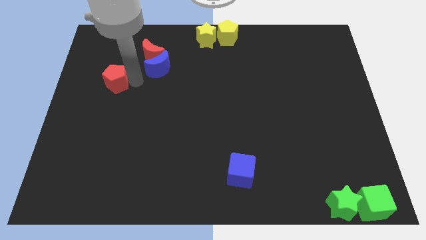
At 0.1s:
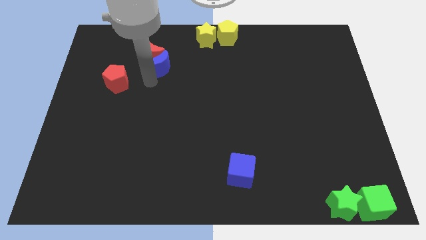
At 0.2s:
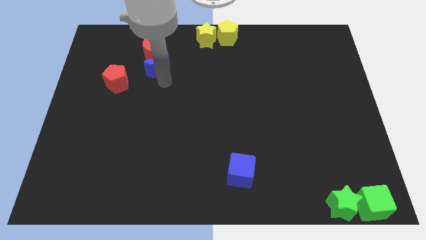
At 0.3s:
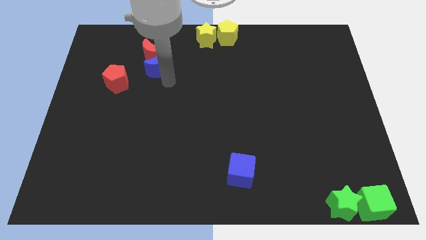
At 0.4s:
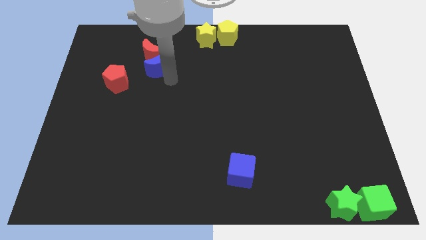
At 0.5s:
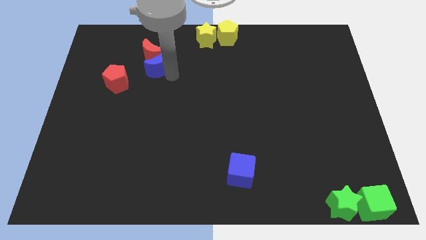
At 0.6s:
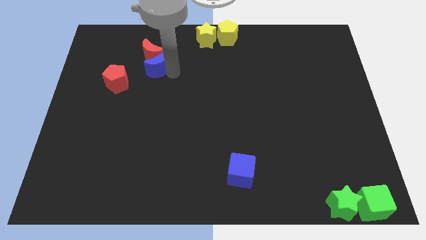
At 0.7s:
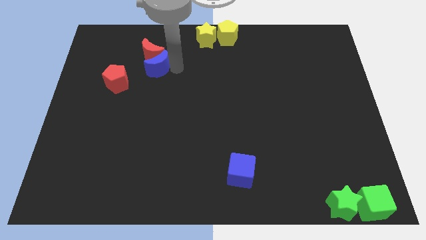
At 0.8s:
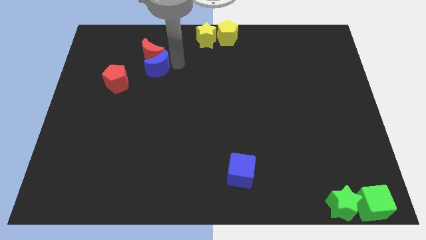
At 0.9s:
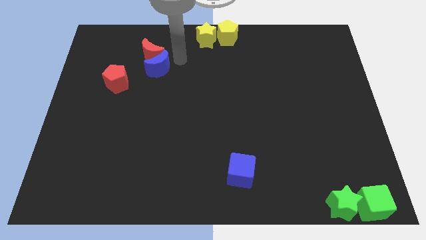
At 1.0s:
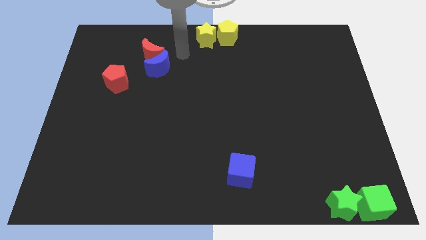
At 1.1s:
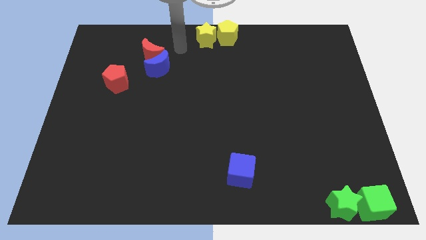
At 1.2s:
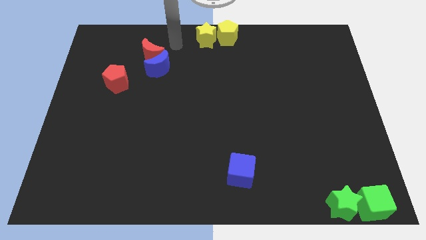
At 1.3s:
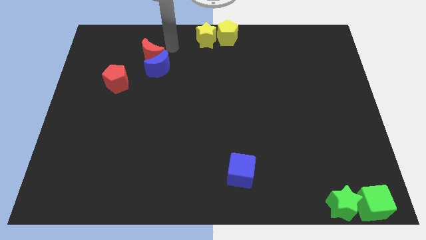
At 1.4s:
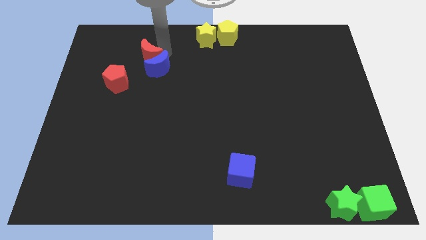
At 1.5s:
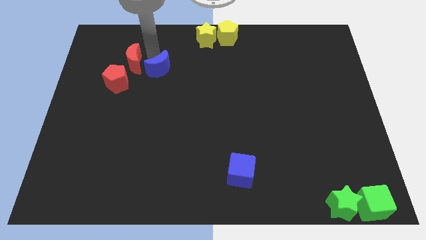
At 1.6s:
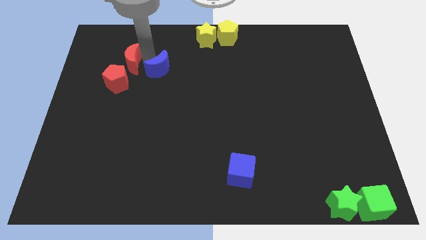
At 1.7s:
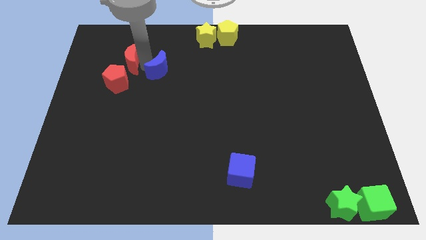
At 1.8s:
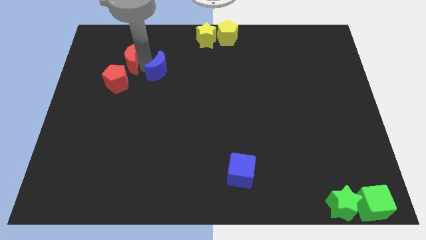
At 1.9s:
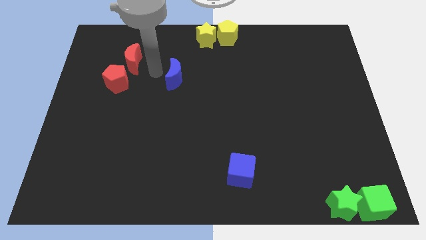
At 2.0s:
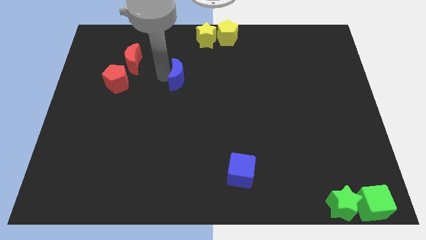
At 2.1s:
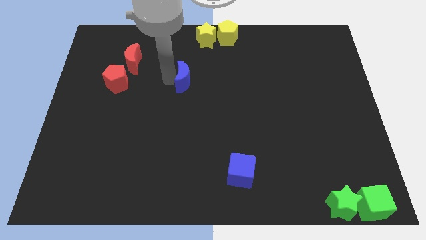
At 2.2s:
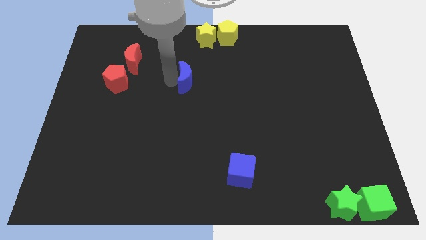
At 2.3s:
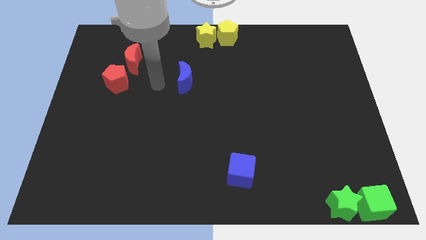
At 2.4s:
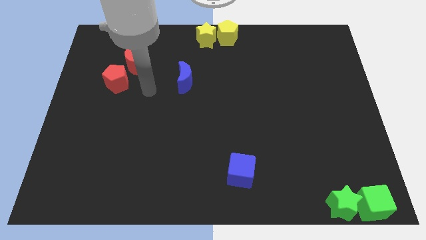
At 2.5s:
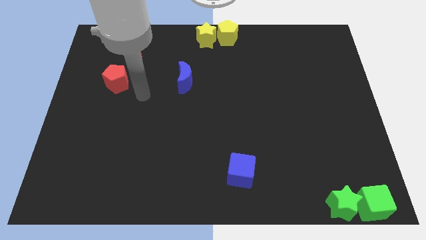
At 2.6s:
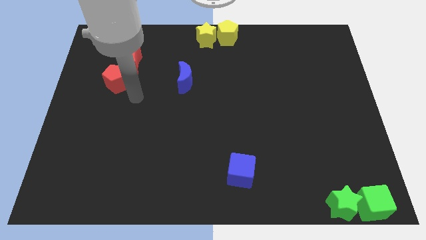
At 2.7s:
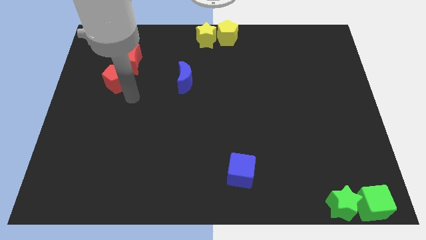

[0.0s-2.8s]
separate the group of crescents from each other

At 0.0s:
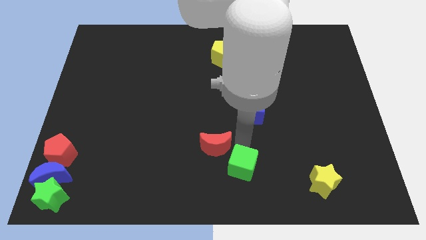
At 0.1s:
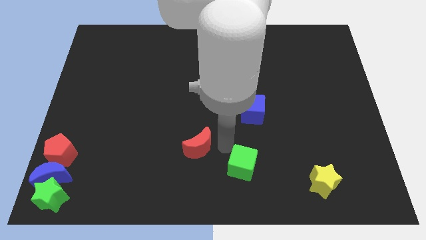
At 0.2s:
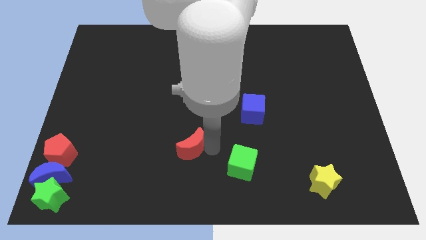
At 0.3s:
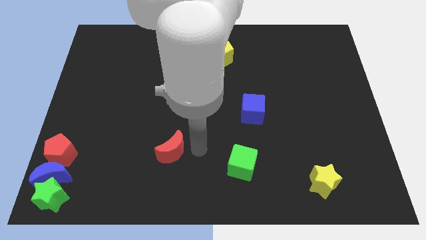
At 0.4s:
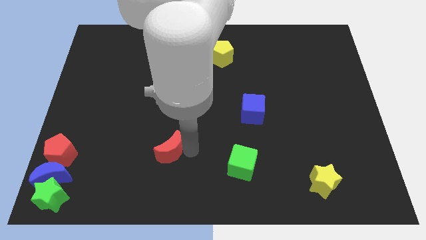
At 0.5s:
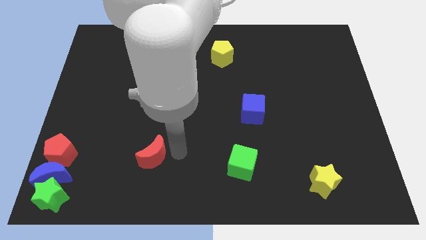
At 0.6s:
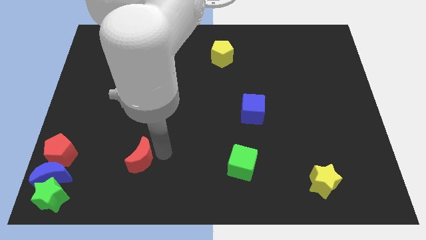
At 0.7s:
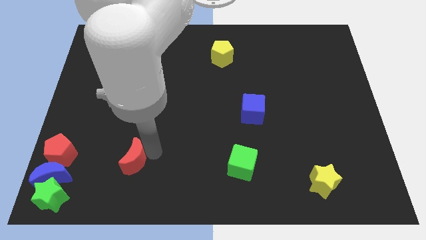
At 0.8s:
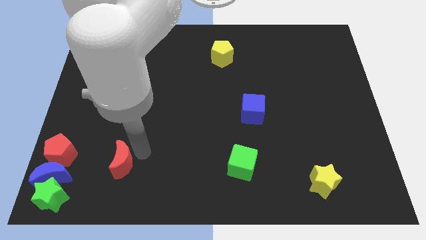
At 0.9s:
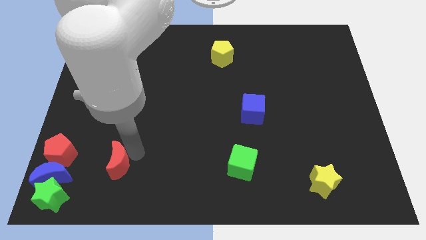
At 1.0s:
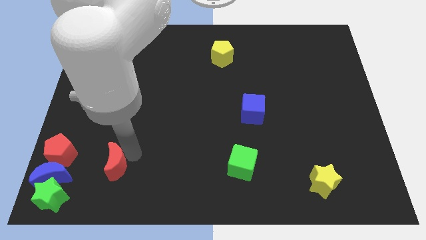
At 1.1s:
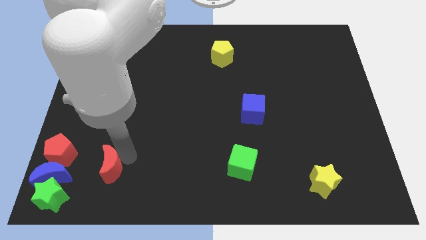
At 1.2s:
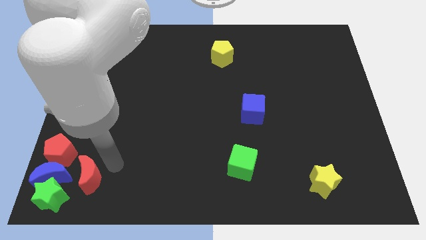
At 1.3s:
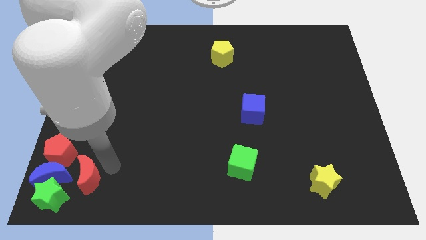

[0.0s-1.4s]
slide the red moon close to the blue moon

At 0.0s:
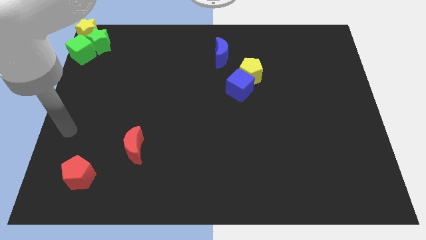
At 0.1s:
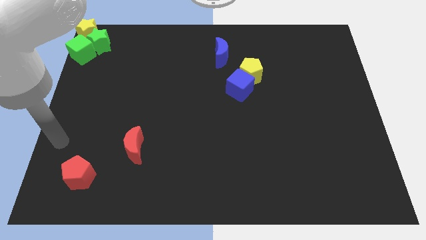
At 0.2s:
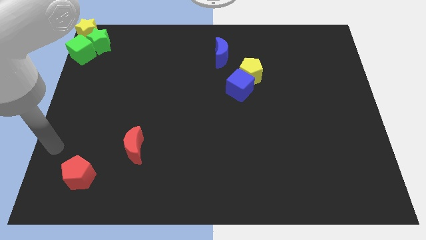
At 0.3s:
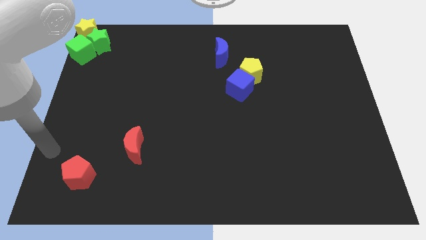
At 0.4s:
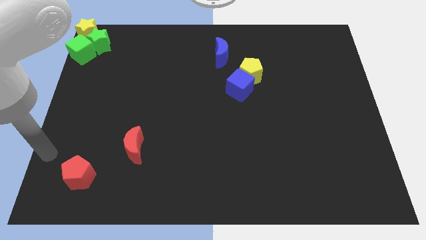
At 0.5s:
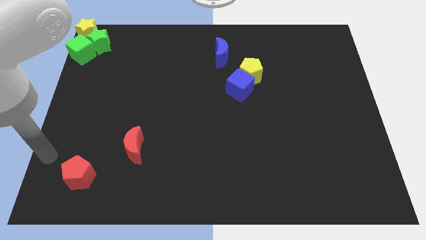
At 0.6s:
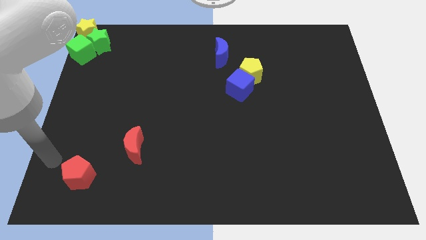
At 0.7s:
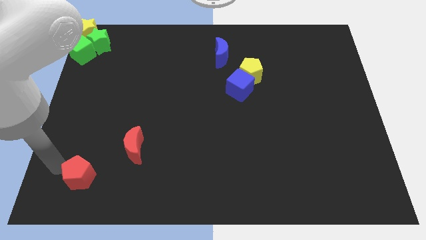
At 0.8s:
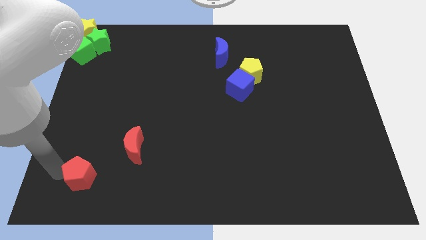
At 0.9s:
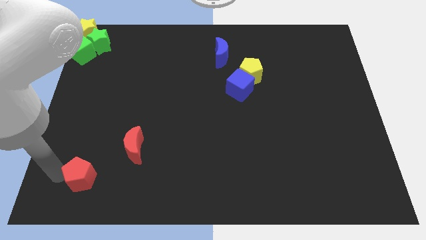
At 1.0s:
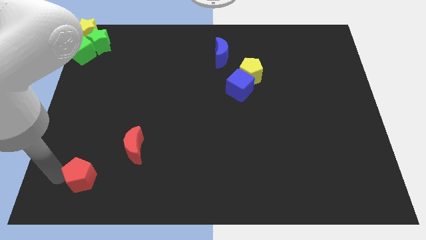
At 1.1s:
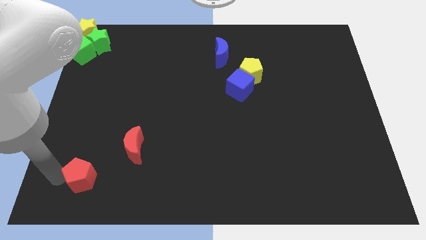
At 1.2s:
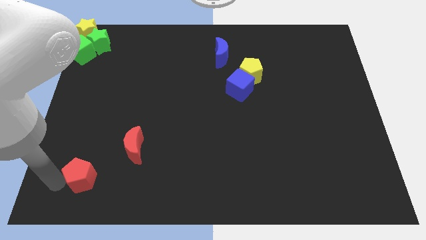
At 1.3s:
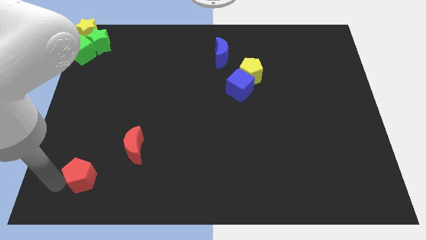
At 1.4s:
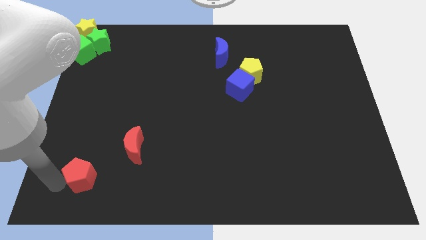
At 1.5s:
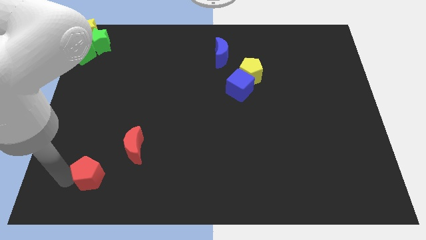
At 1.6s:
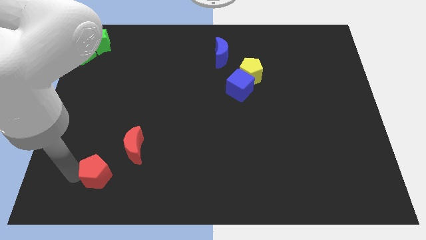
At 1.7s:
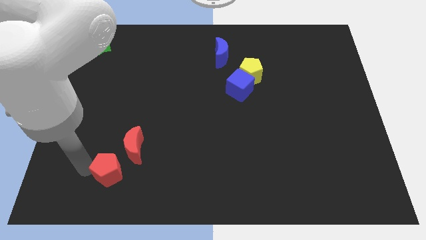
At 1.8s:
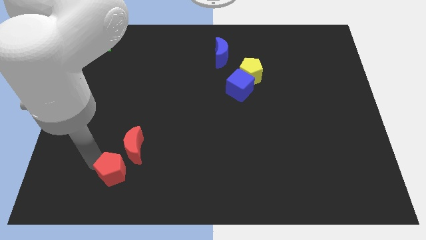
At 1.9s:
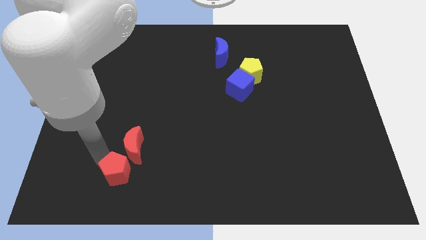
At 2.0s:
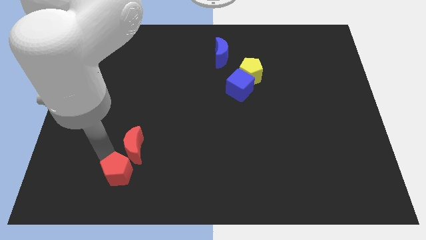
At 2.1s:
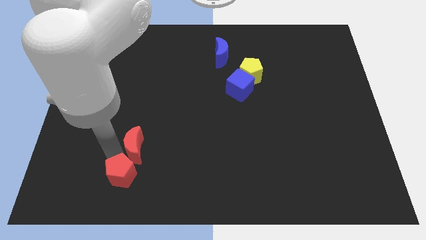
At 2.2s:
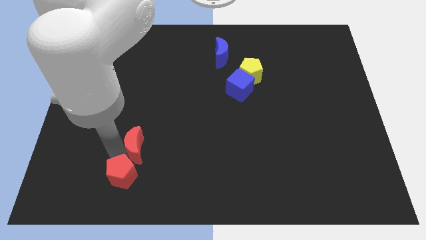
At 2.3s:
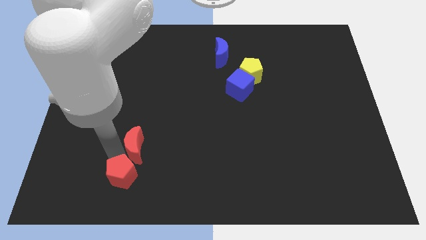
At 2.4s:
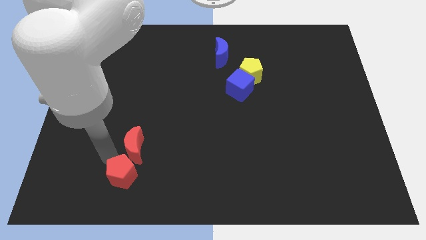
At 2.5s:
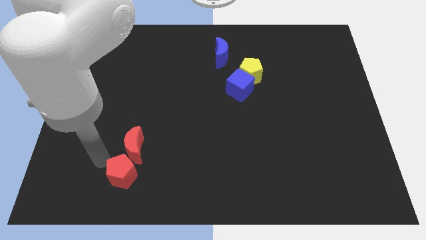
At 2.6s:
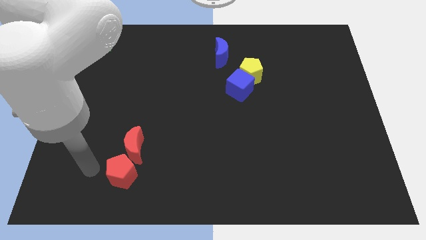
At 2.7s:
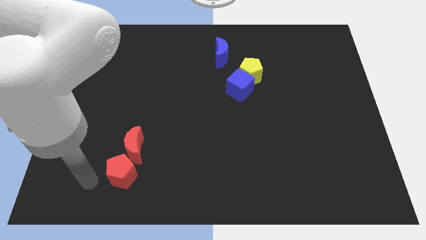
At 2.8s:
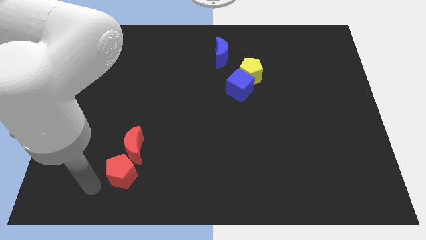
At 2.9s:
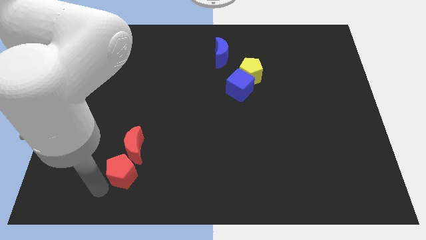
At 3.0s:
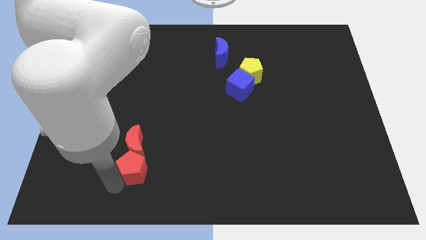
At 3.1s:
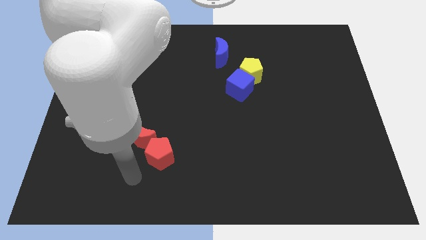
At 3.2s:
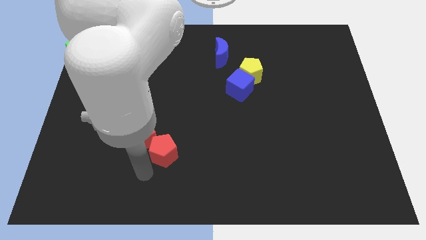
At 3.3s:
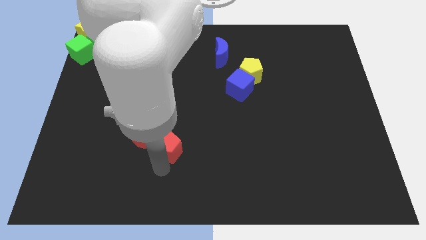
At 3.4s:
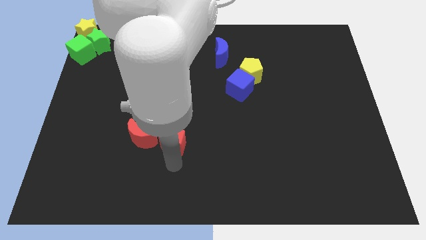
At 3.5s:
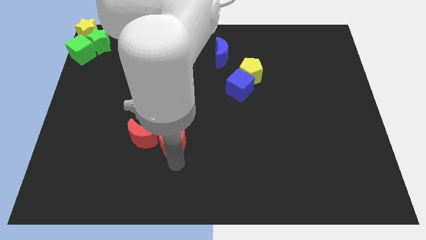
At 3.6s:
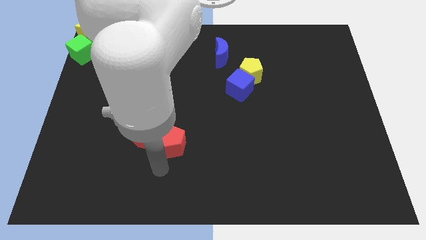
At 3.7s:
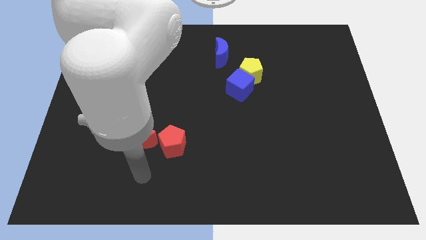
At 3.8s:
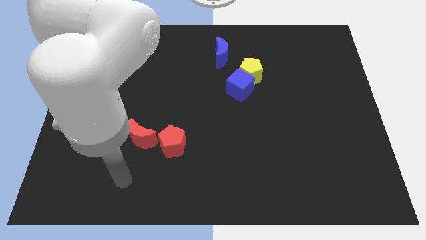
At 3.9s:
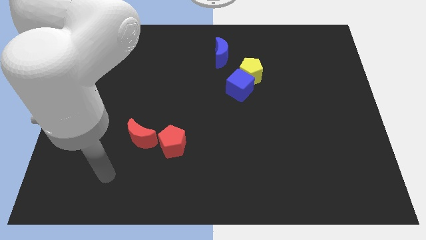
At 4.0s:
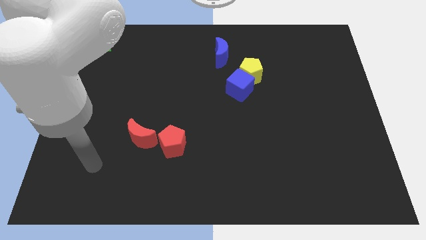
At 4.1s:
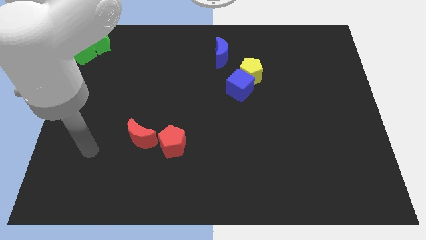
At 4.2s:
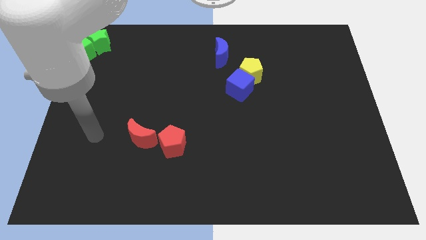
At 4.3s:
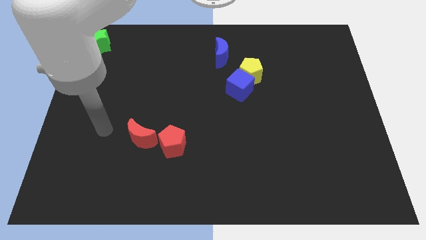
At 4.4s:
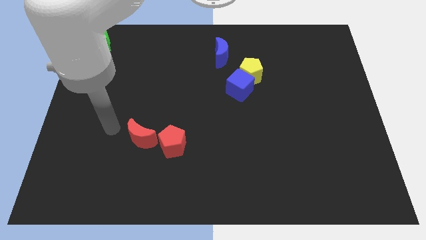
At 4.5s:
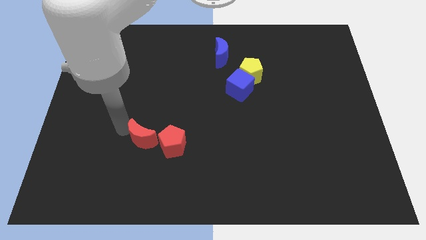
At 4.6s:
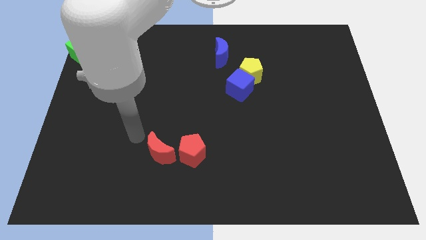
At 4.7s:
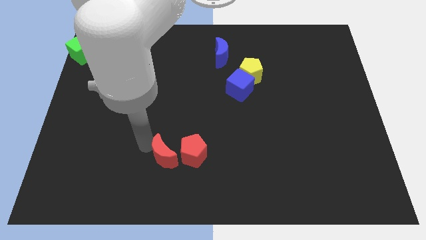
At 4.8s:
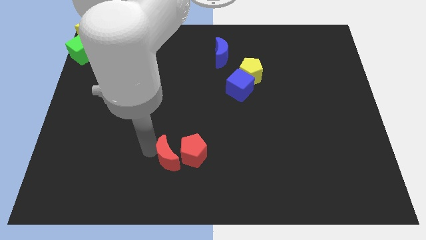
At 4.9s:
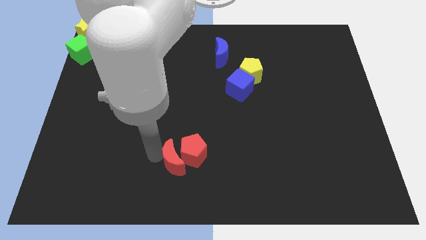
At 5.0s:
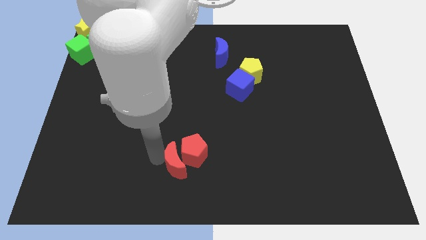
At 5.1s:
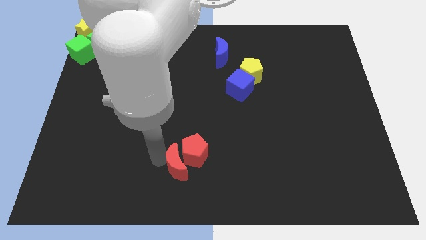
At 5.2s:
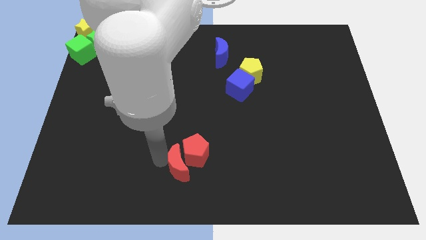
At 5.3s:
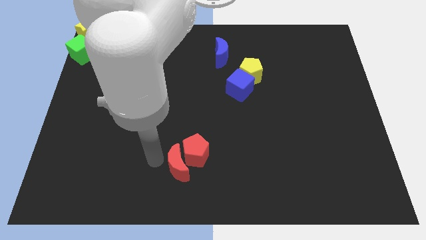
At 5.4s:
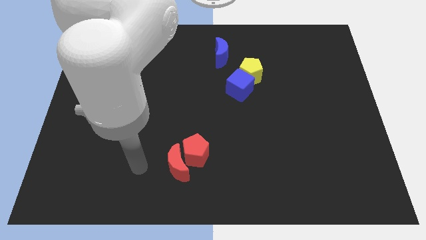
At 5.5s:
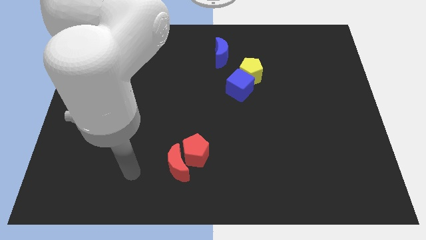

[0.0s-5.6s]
push the red pentagon and red moon towards the center of the board
